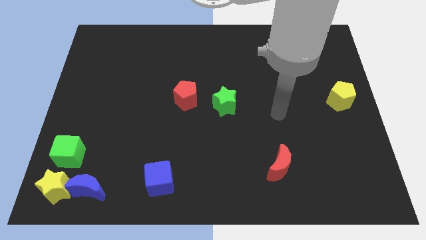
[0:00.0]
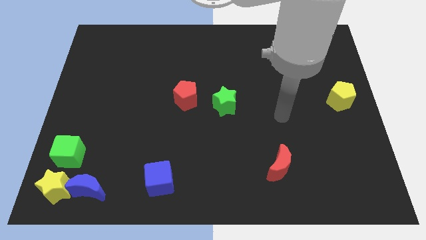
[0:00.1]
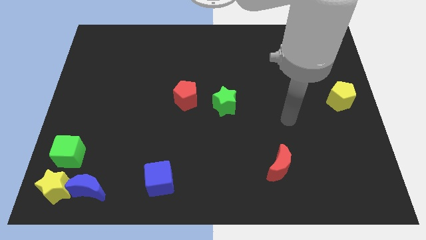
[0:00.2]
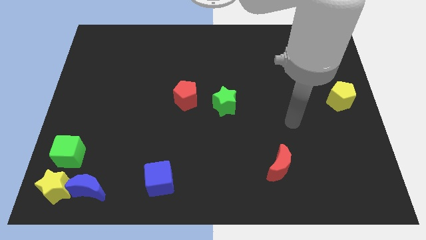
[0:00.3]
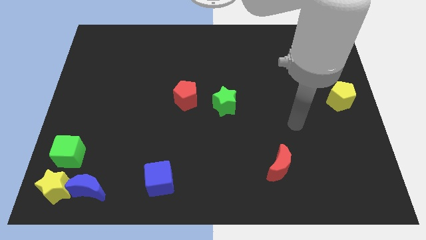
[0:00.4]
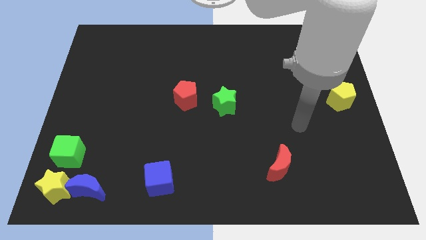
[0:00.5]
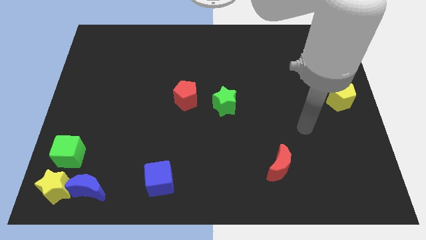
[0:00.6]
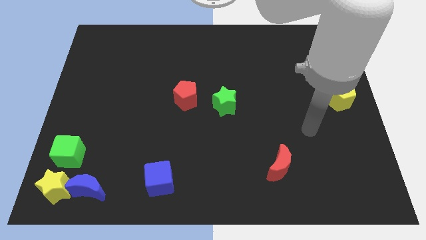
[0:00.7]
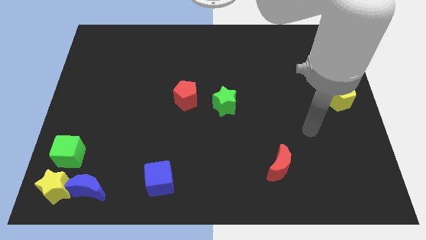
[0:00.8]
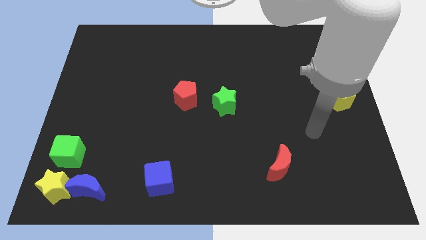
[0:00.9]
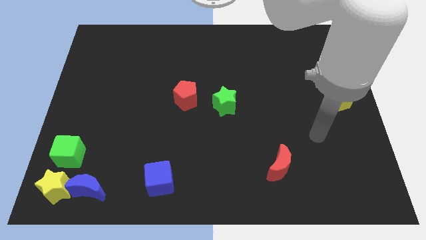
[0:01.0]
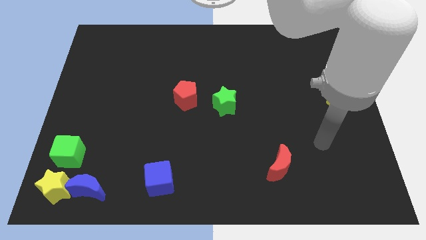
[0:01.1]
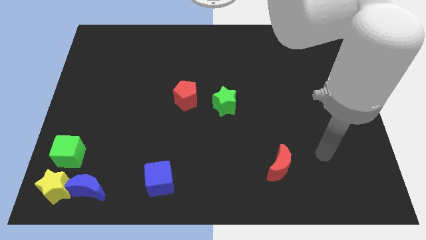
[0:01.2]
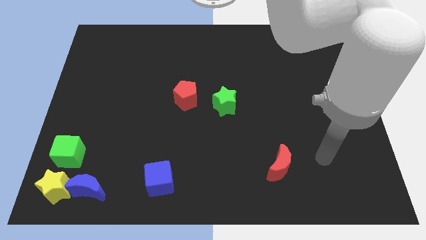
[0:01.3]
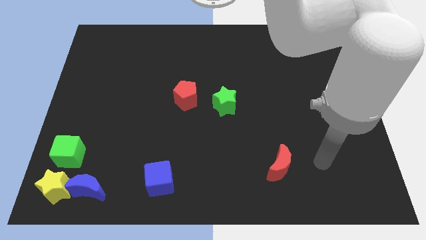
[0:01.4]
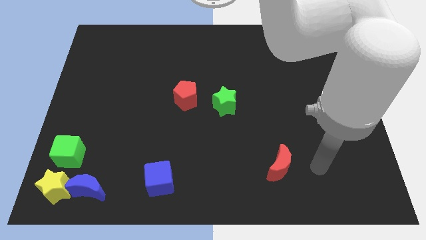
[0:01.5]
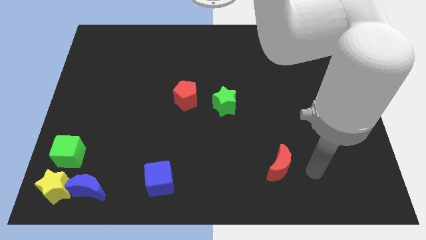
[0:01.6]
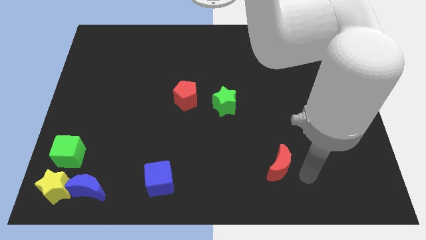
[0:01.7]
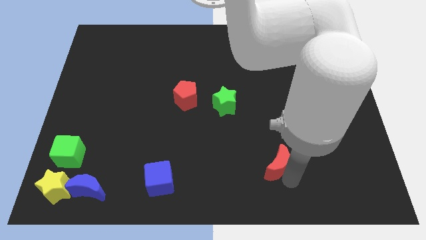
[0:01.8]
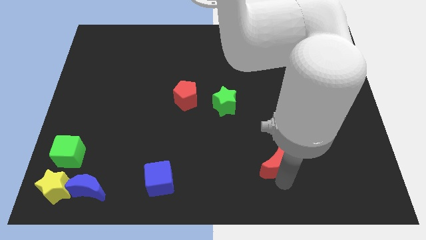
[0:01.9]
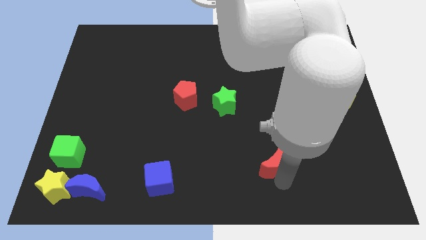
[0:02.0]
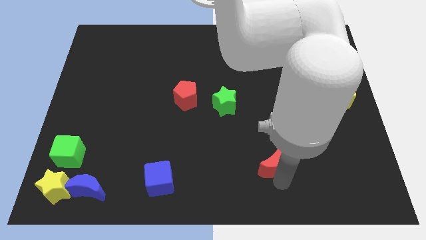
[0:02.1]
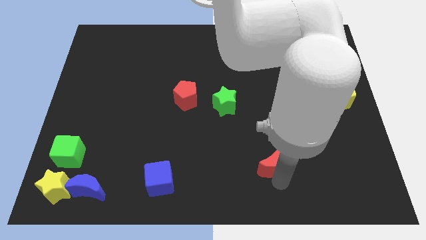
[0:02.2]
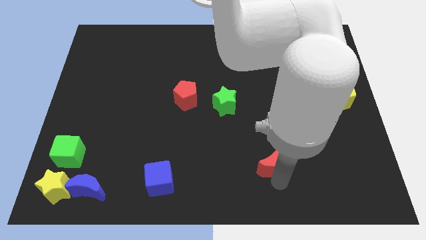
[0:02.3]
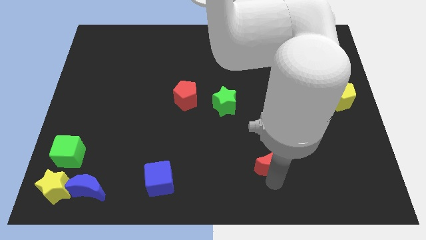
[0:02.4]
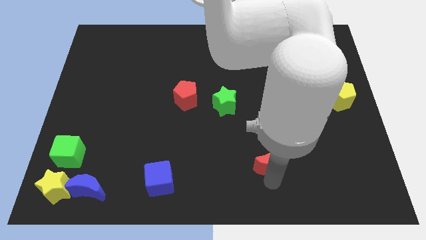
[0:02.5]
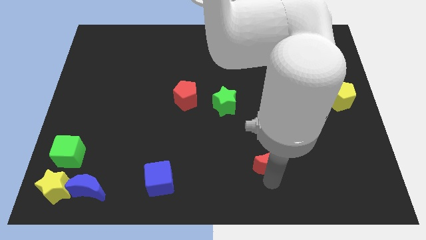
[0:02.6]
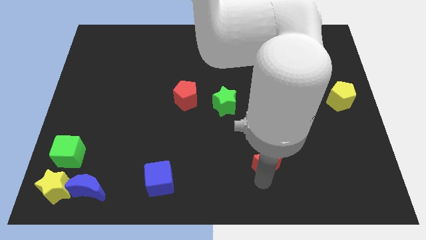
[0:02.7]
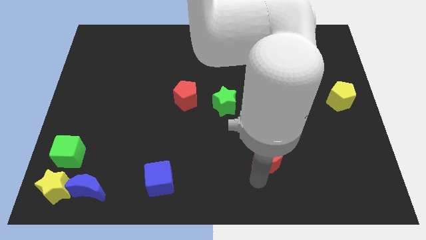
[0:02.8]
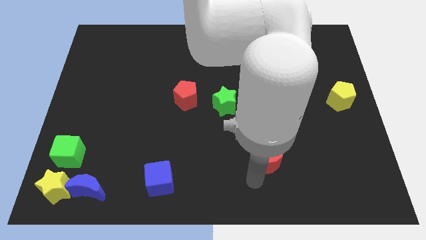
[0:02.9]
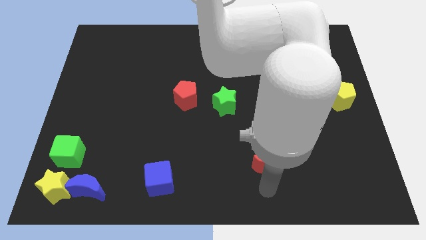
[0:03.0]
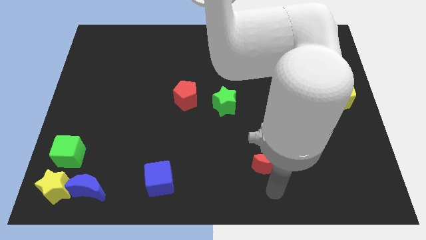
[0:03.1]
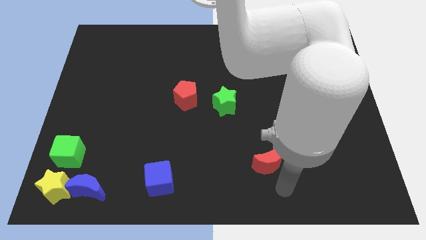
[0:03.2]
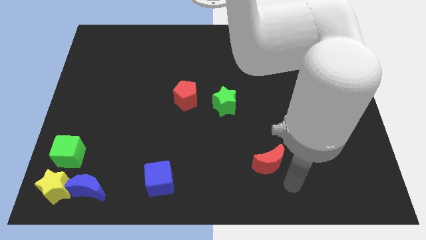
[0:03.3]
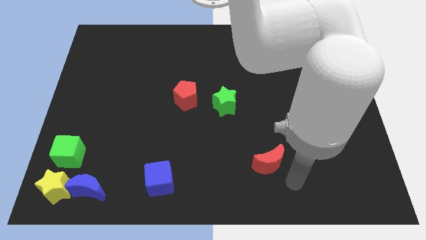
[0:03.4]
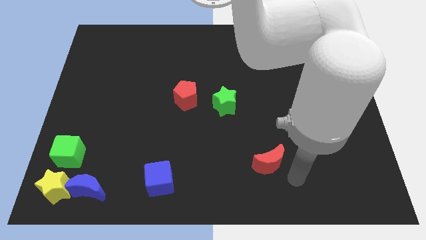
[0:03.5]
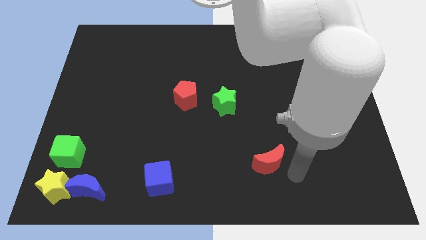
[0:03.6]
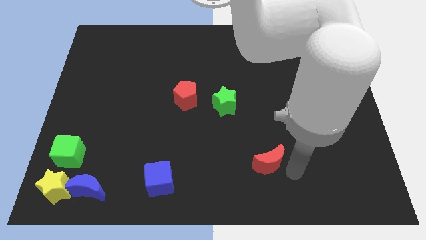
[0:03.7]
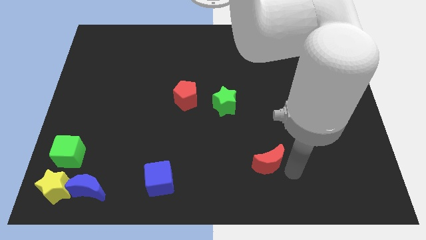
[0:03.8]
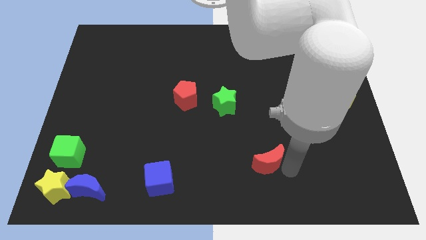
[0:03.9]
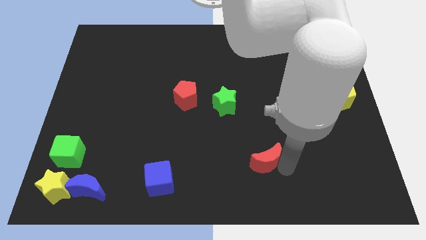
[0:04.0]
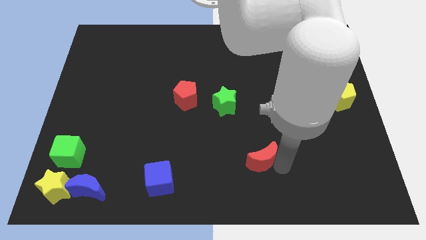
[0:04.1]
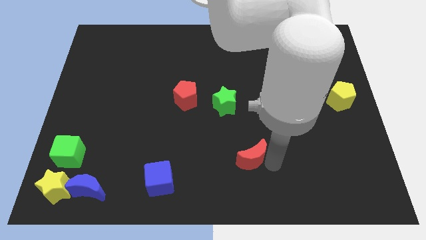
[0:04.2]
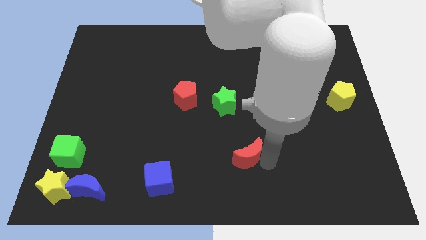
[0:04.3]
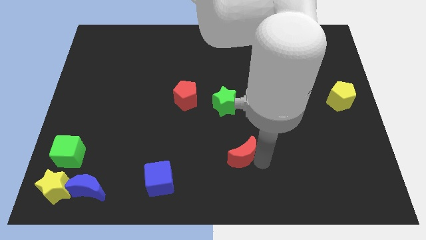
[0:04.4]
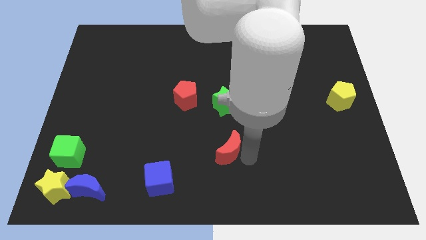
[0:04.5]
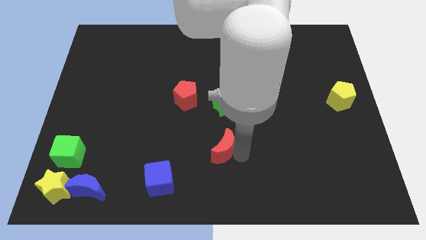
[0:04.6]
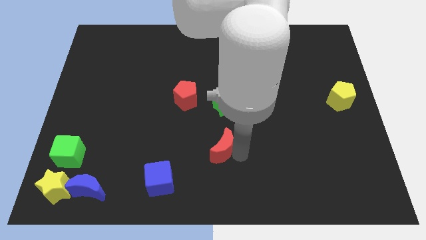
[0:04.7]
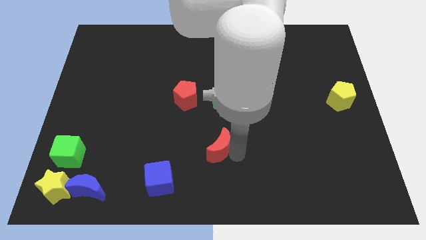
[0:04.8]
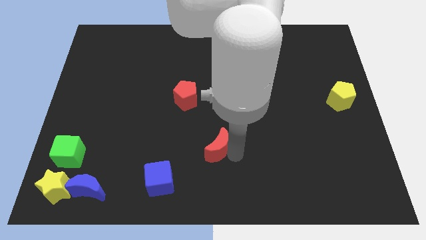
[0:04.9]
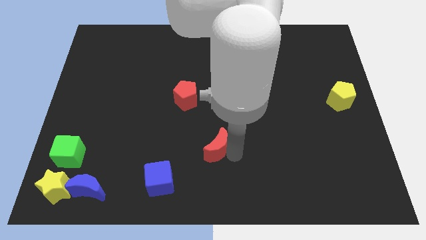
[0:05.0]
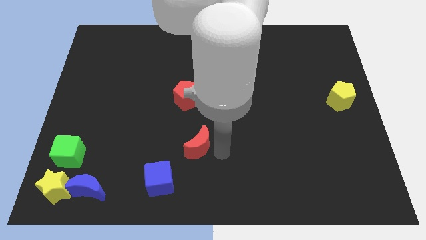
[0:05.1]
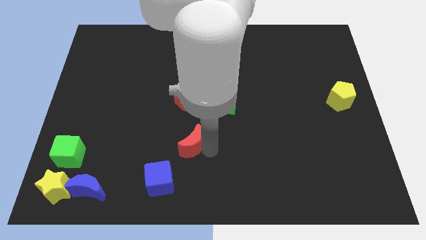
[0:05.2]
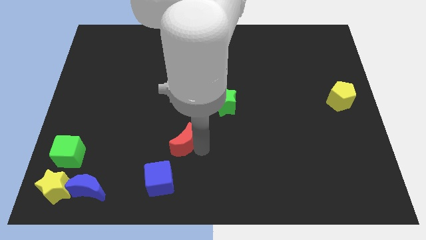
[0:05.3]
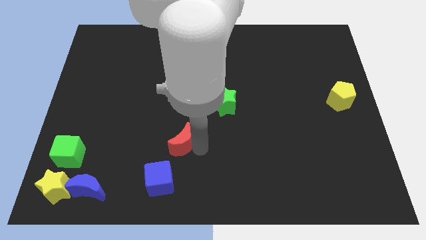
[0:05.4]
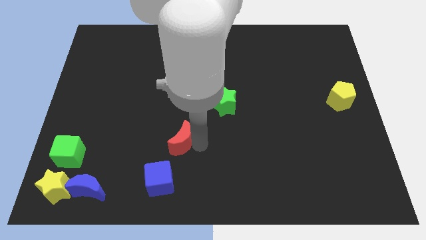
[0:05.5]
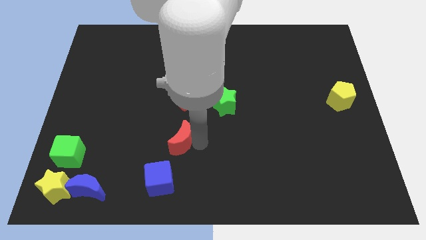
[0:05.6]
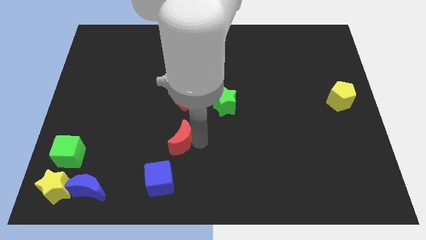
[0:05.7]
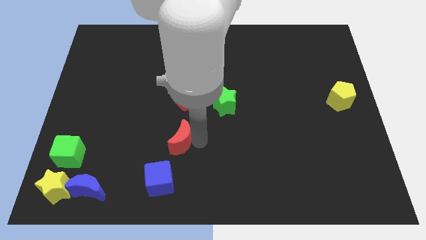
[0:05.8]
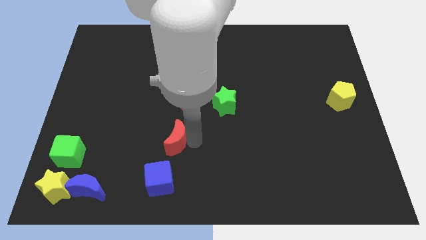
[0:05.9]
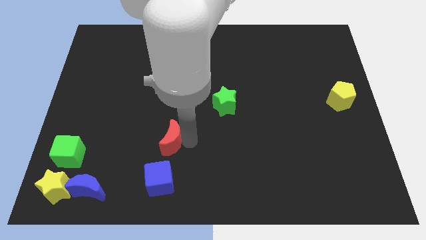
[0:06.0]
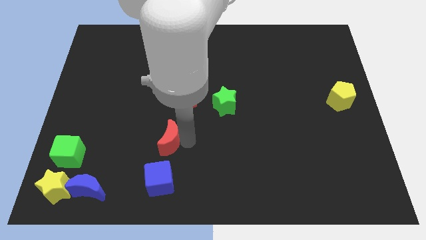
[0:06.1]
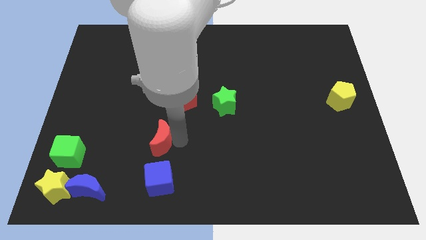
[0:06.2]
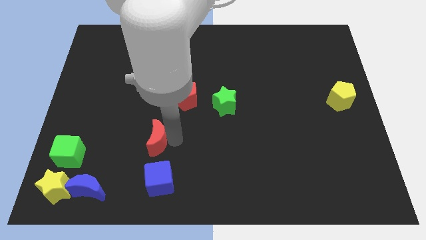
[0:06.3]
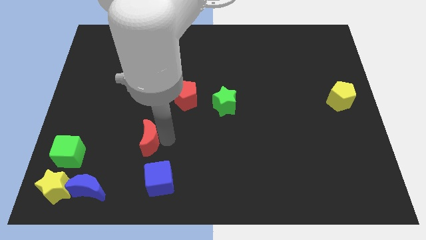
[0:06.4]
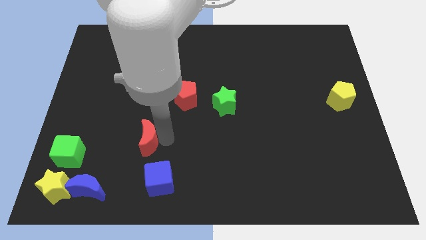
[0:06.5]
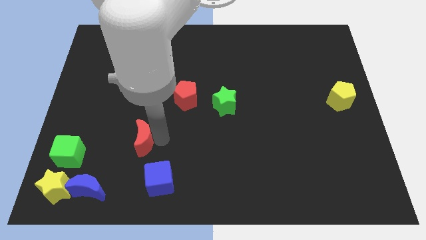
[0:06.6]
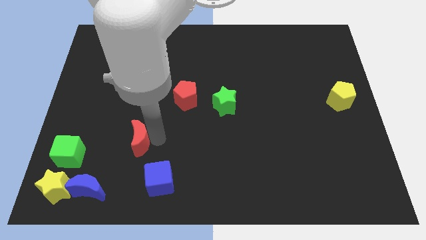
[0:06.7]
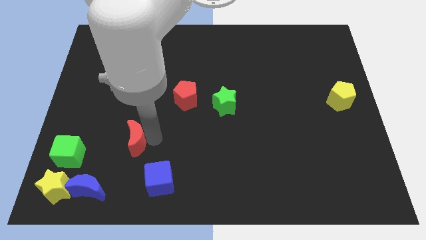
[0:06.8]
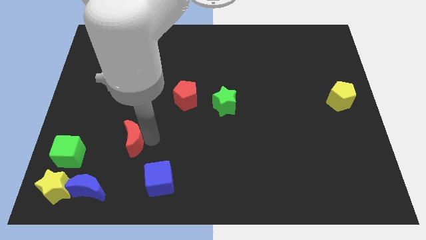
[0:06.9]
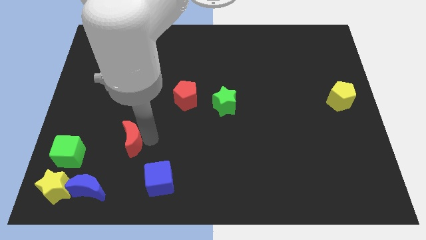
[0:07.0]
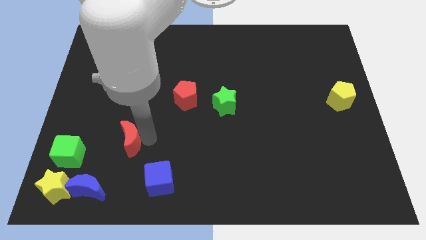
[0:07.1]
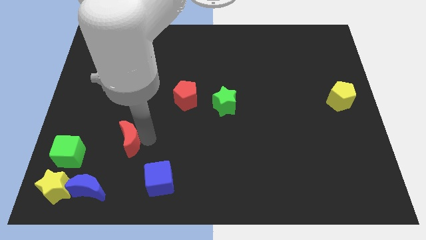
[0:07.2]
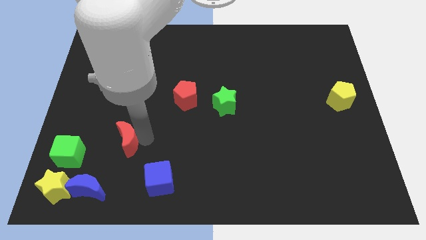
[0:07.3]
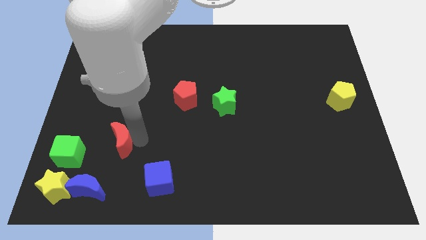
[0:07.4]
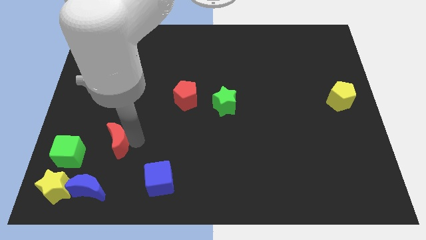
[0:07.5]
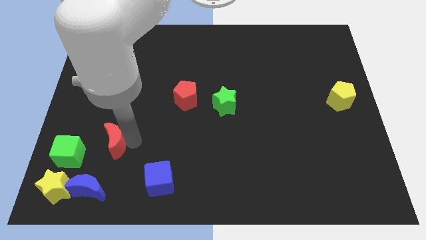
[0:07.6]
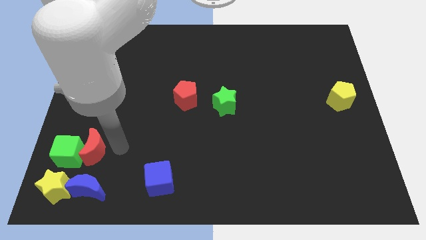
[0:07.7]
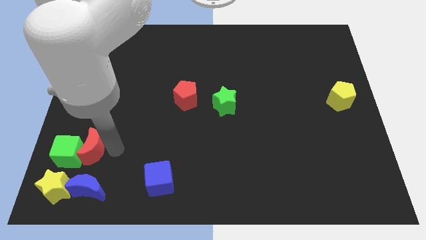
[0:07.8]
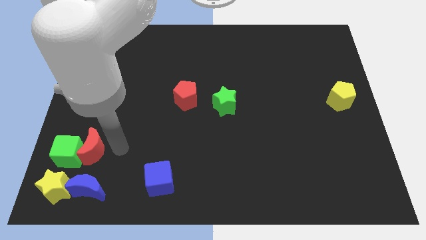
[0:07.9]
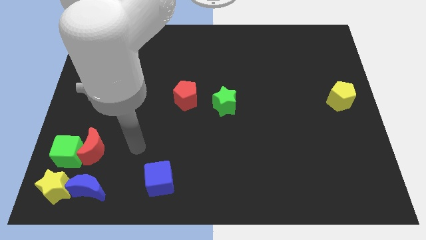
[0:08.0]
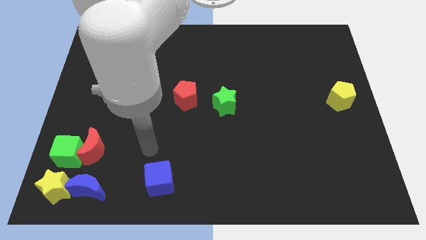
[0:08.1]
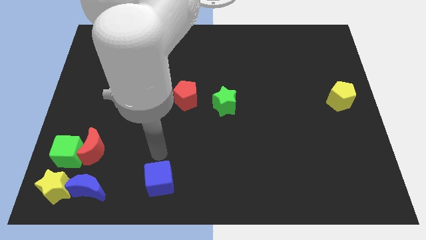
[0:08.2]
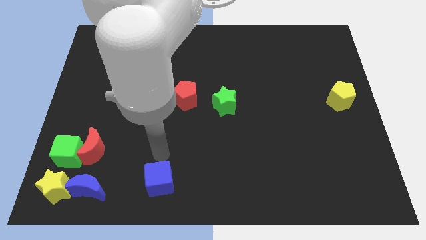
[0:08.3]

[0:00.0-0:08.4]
push the red crescent into the green cube

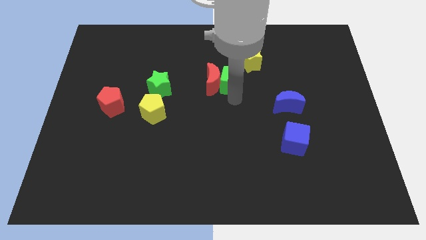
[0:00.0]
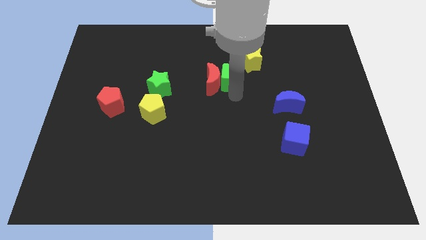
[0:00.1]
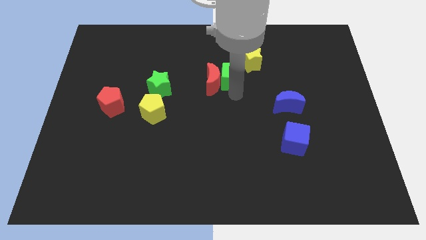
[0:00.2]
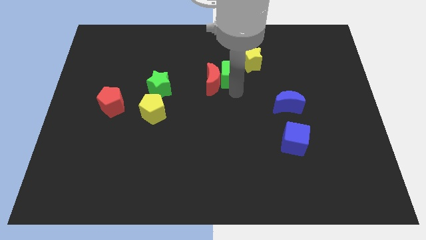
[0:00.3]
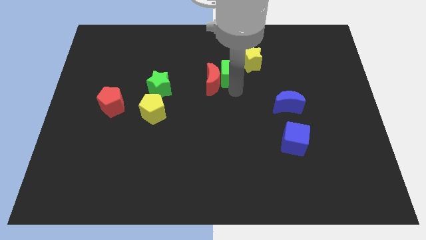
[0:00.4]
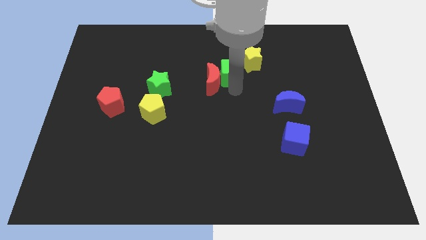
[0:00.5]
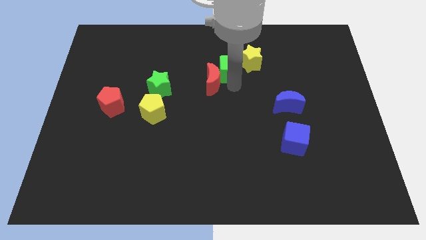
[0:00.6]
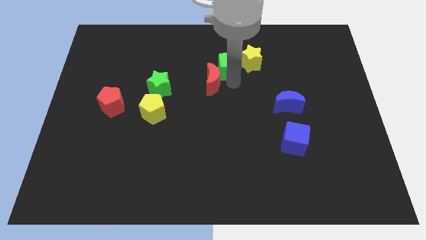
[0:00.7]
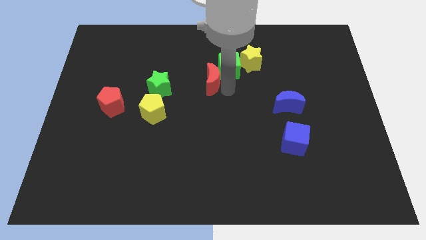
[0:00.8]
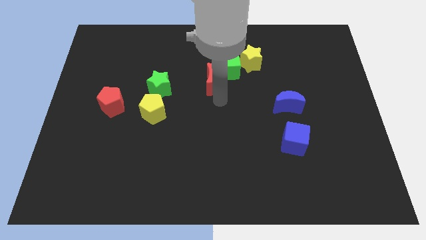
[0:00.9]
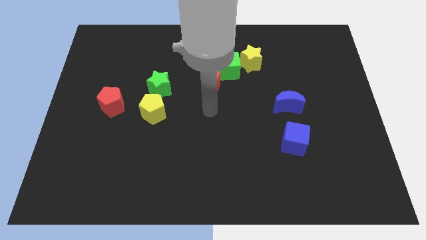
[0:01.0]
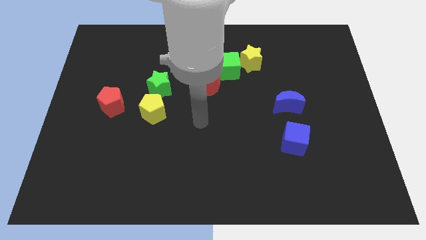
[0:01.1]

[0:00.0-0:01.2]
move the green cube to the left of the yellow star
